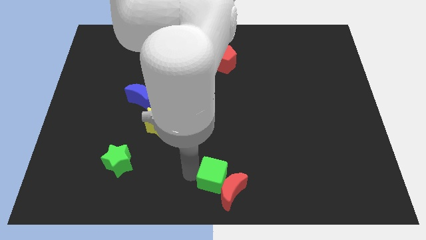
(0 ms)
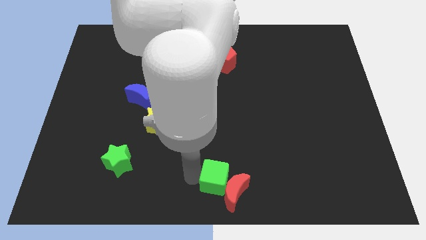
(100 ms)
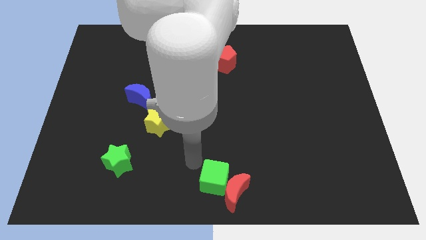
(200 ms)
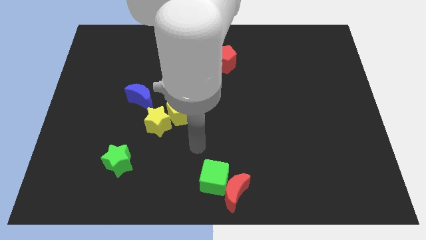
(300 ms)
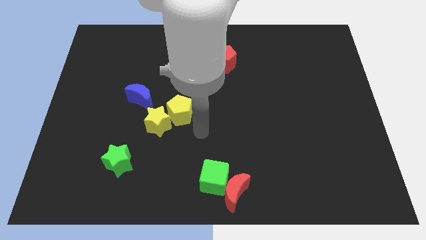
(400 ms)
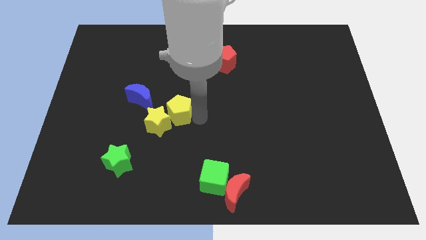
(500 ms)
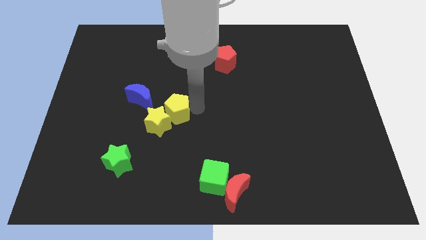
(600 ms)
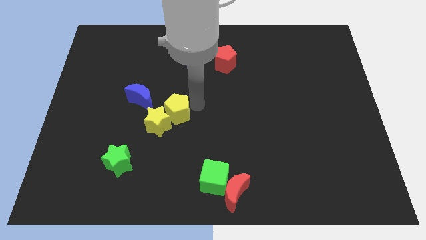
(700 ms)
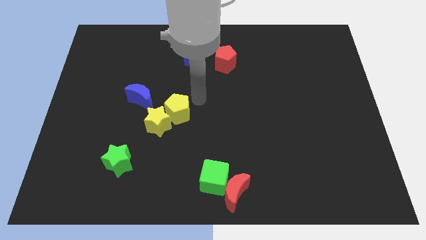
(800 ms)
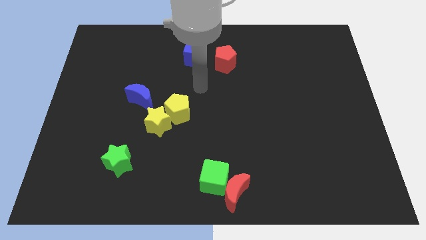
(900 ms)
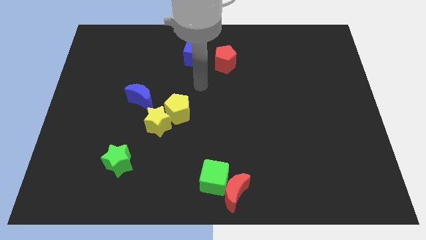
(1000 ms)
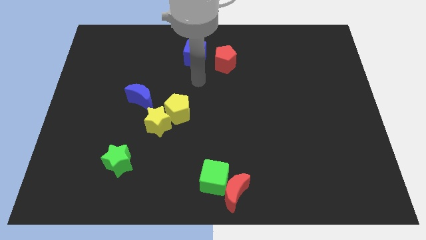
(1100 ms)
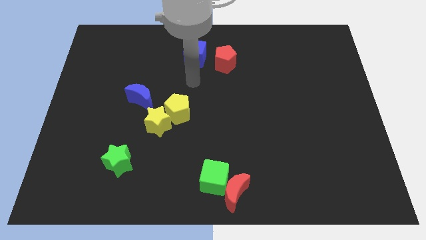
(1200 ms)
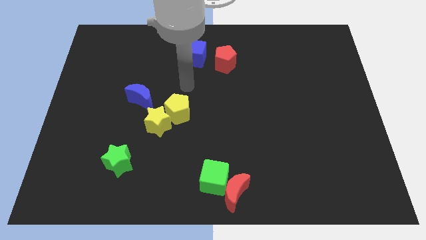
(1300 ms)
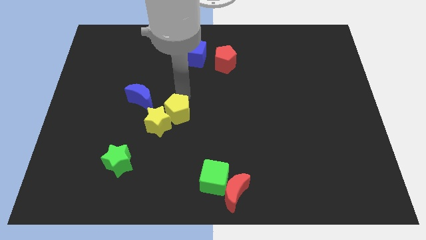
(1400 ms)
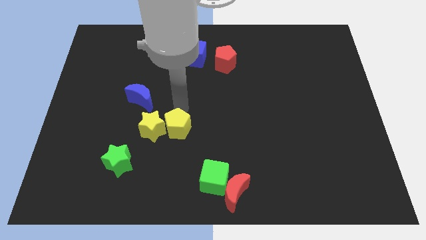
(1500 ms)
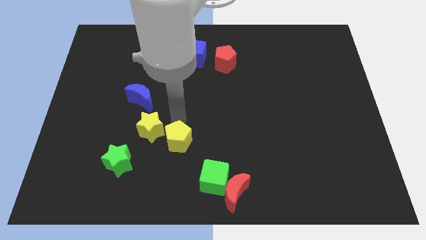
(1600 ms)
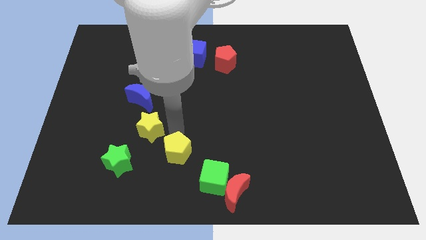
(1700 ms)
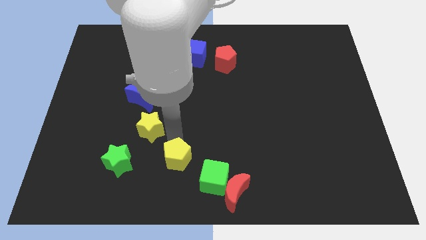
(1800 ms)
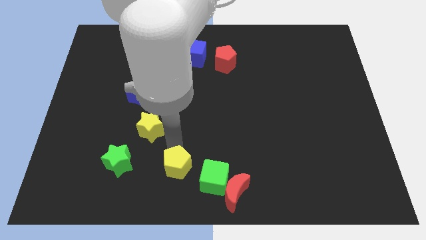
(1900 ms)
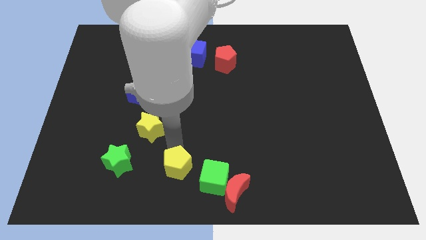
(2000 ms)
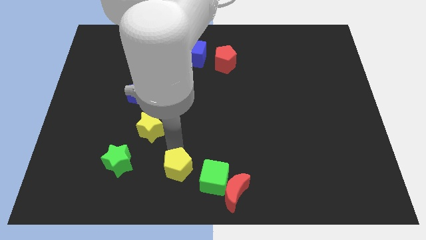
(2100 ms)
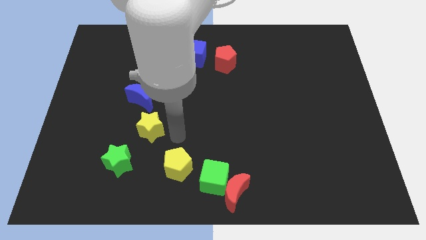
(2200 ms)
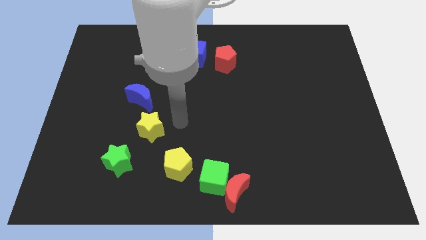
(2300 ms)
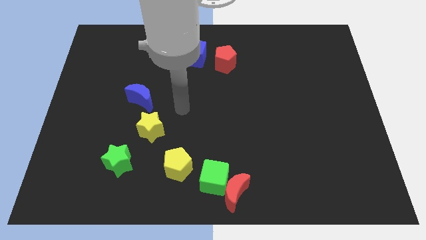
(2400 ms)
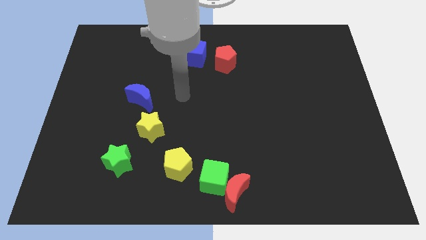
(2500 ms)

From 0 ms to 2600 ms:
push yellow pentagon to bottom center of the board

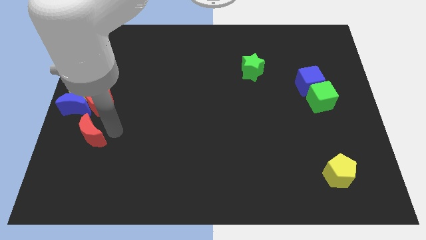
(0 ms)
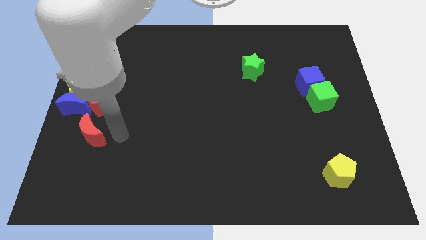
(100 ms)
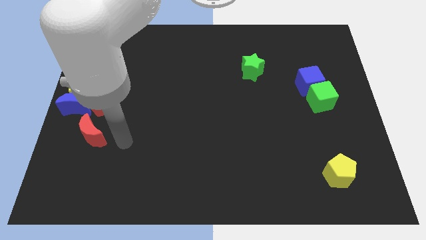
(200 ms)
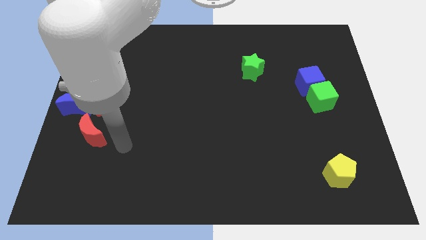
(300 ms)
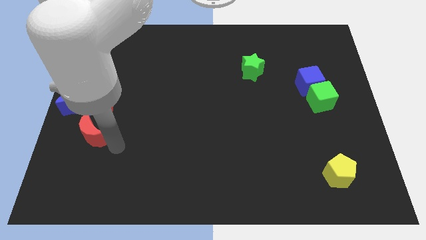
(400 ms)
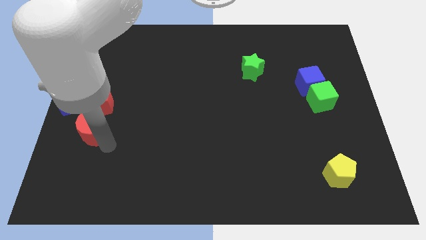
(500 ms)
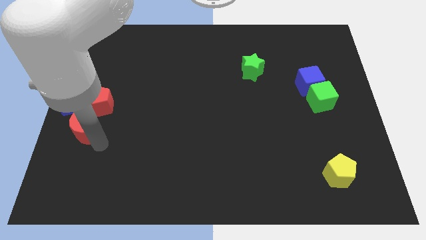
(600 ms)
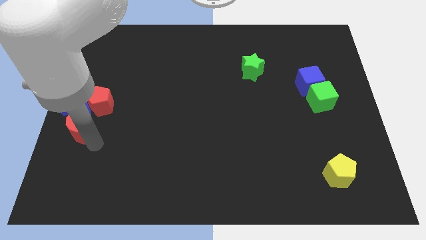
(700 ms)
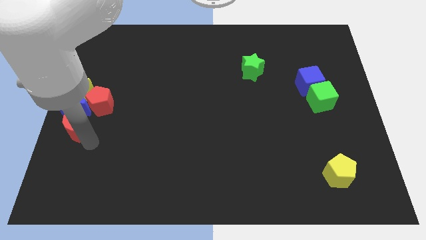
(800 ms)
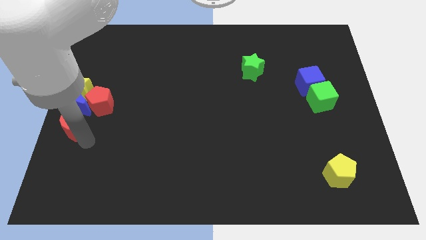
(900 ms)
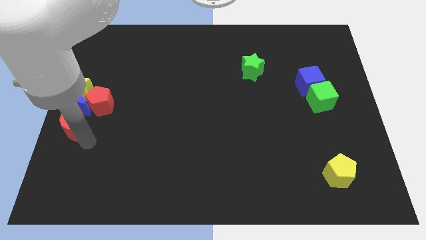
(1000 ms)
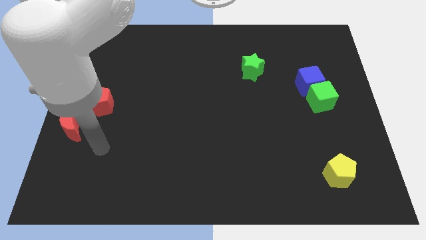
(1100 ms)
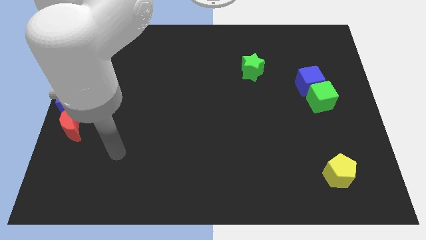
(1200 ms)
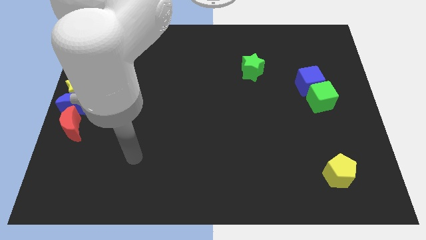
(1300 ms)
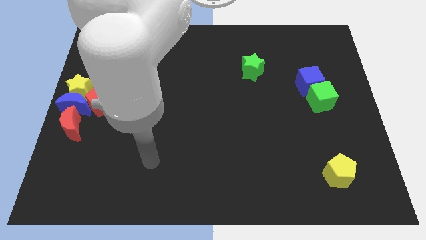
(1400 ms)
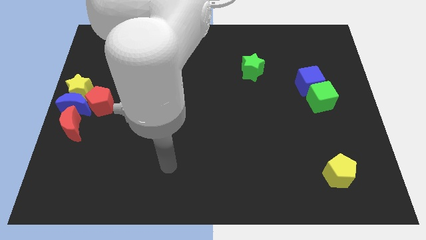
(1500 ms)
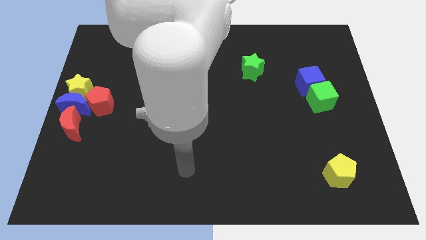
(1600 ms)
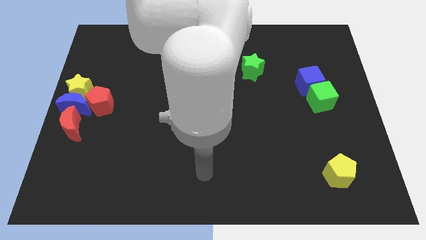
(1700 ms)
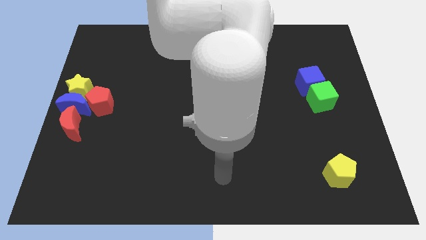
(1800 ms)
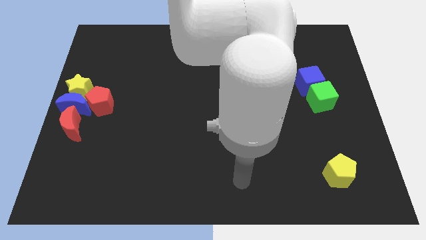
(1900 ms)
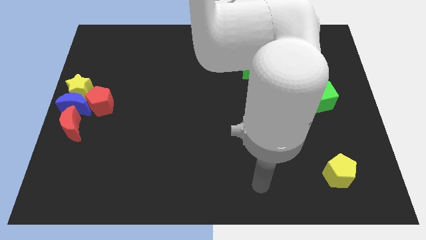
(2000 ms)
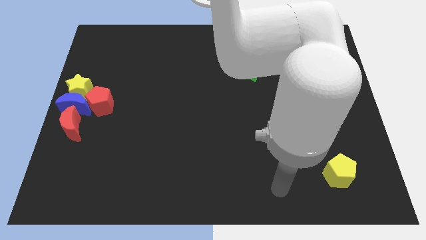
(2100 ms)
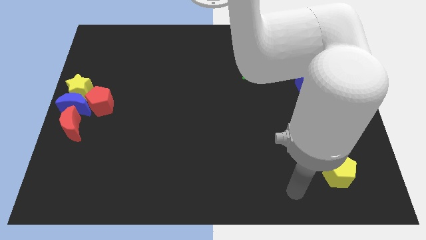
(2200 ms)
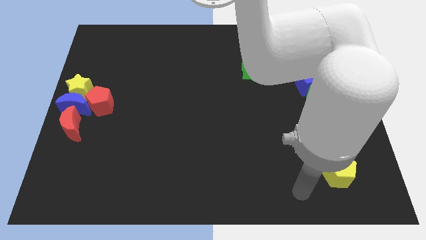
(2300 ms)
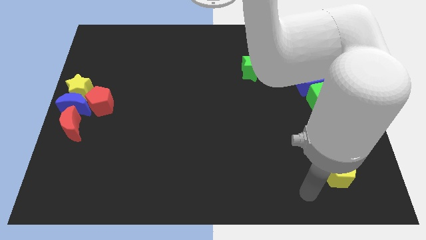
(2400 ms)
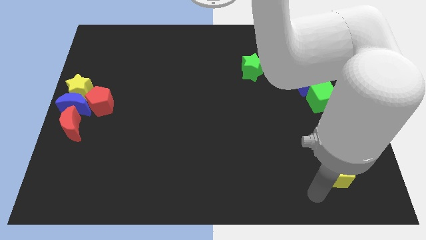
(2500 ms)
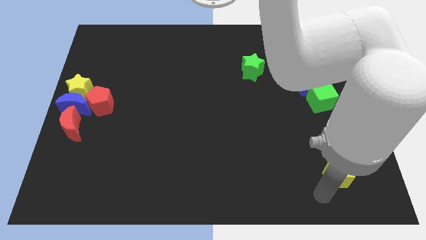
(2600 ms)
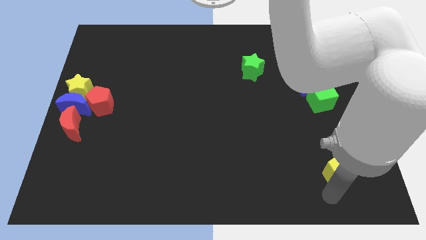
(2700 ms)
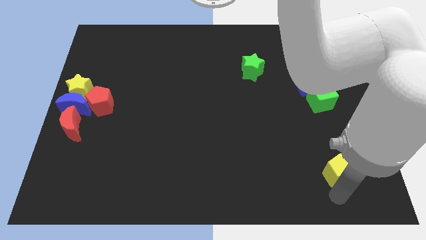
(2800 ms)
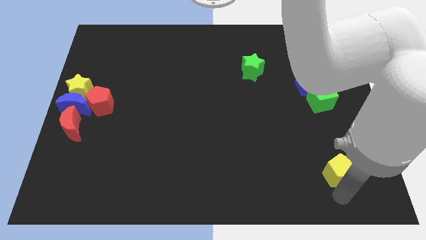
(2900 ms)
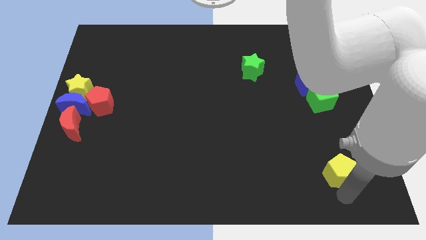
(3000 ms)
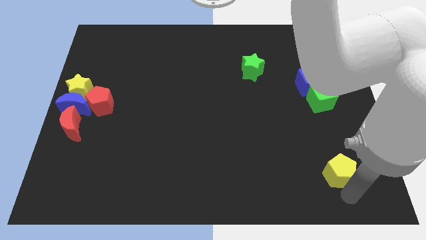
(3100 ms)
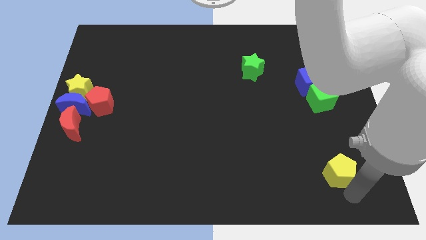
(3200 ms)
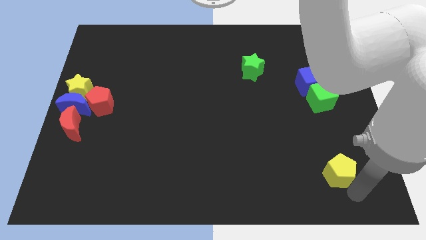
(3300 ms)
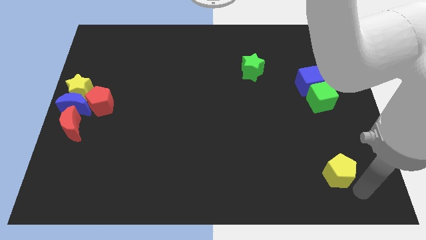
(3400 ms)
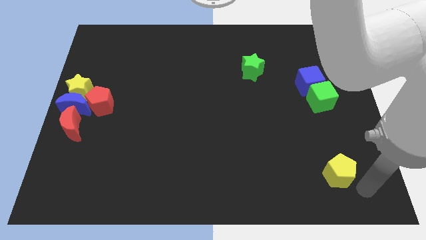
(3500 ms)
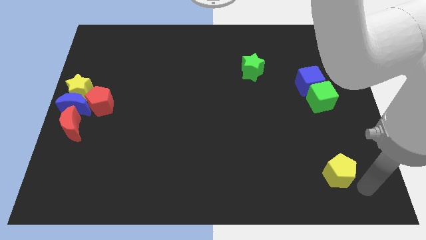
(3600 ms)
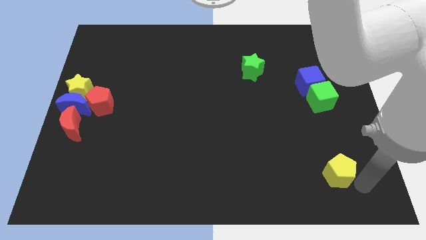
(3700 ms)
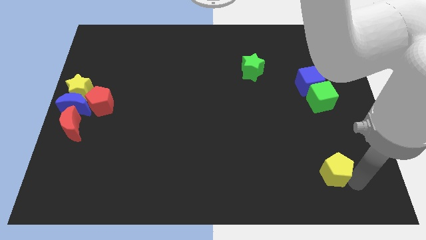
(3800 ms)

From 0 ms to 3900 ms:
place the red crescent on the bottom side of the blue moon

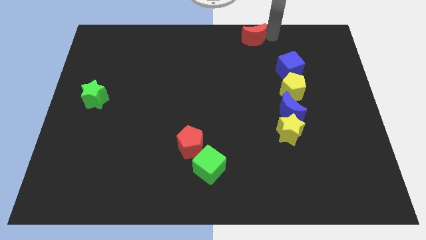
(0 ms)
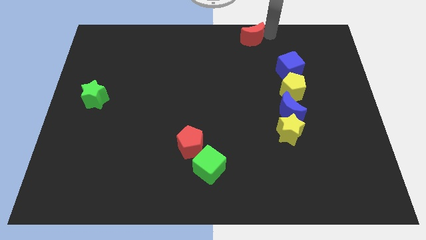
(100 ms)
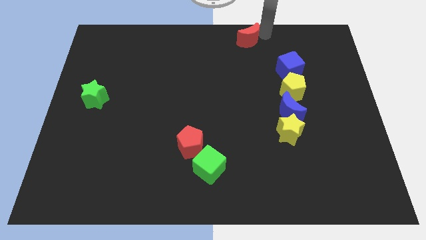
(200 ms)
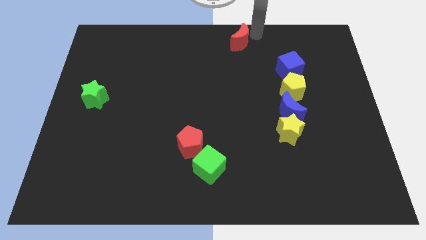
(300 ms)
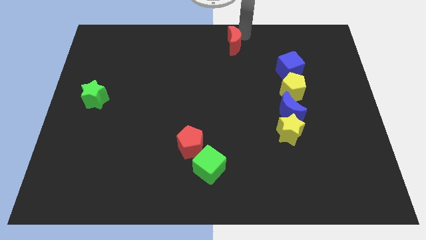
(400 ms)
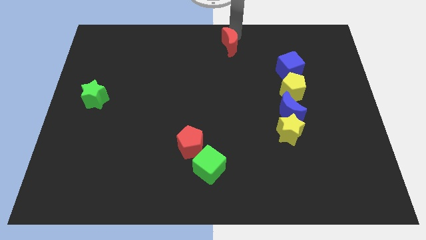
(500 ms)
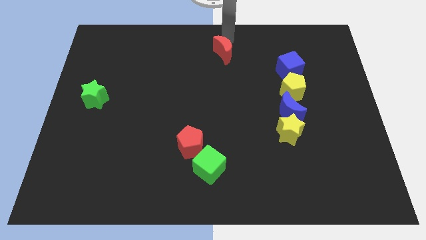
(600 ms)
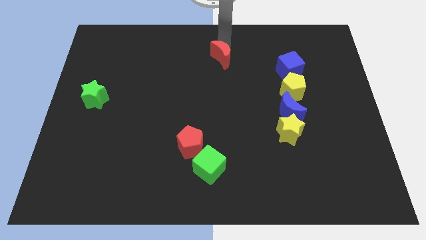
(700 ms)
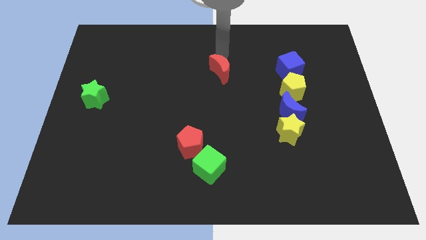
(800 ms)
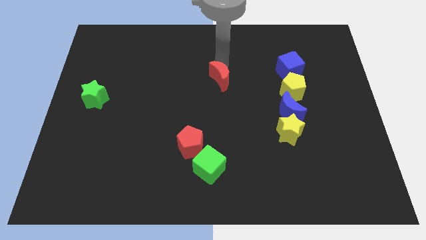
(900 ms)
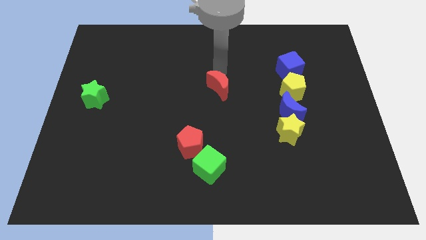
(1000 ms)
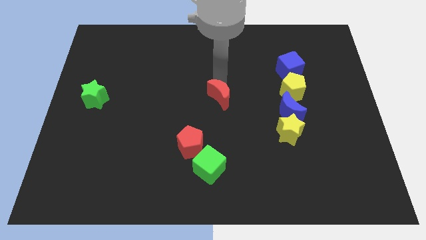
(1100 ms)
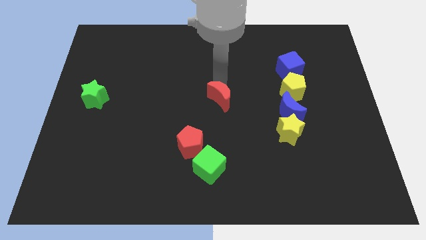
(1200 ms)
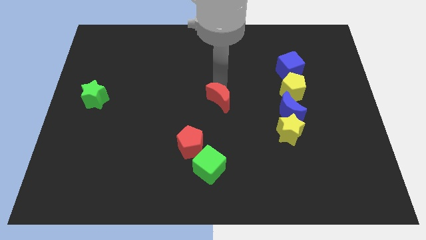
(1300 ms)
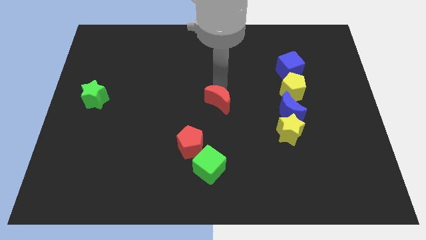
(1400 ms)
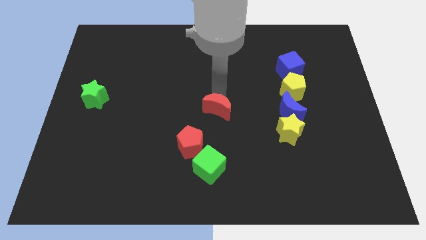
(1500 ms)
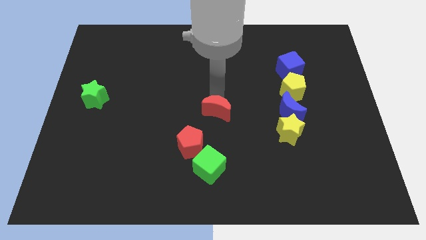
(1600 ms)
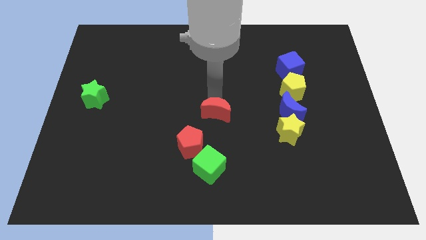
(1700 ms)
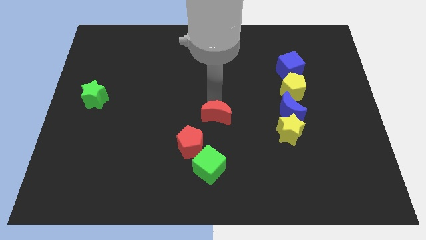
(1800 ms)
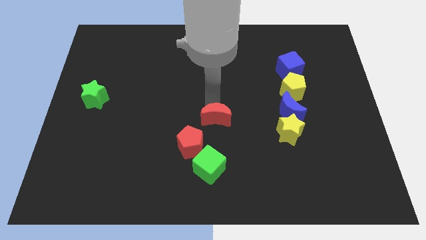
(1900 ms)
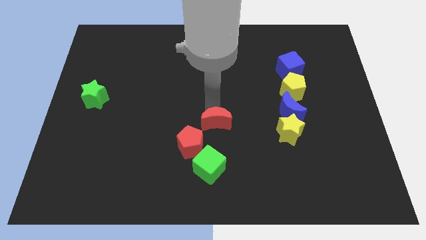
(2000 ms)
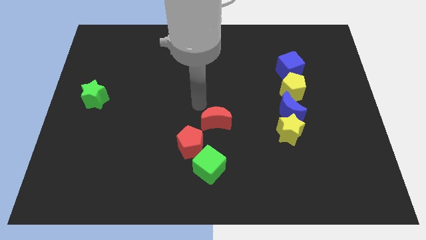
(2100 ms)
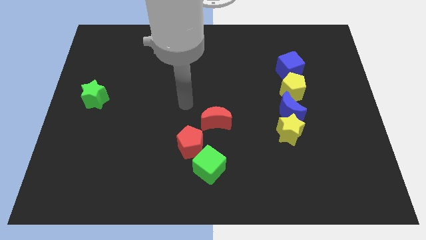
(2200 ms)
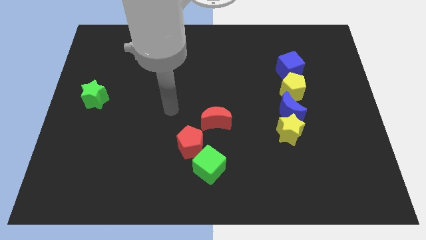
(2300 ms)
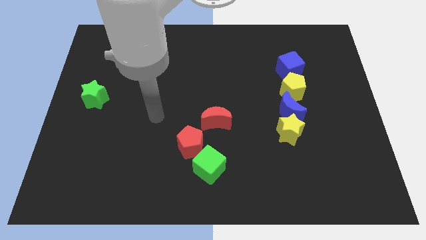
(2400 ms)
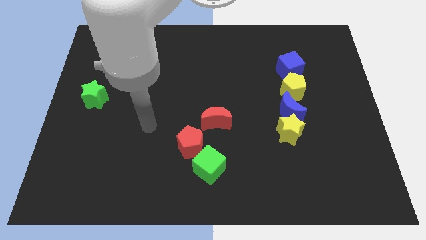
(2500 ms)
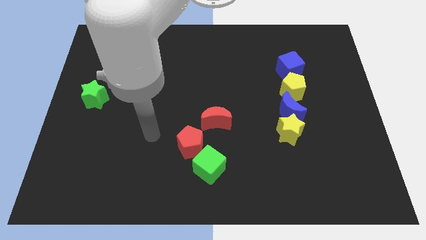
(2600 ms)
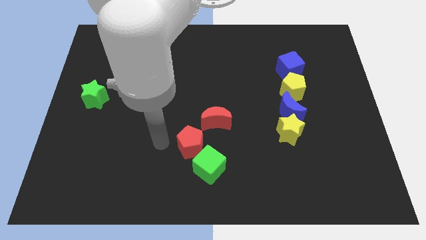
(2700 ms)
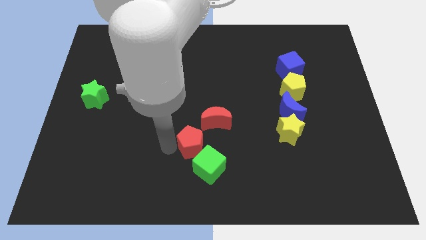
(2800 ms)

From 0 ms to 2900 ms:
push the red crescent to the bottom of the board
